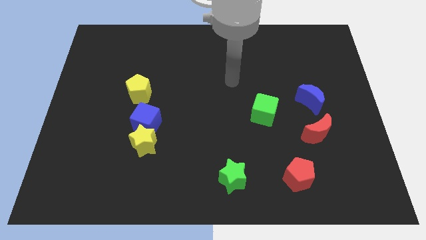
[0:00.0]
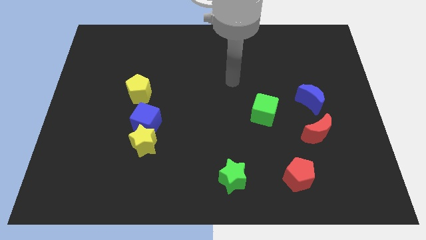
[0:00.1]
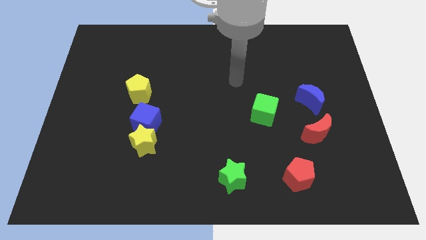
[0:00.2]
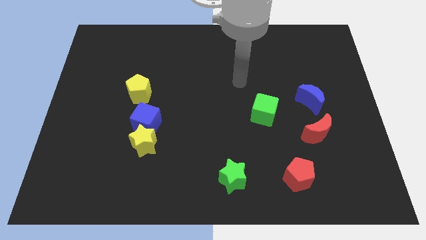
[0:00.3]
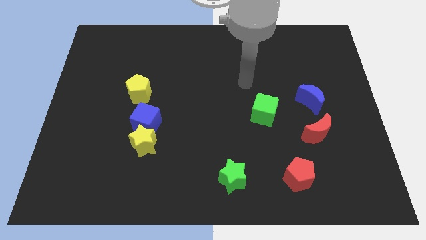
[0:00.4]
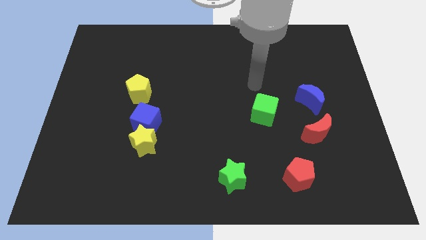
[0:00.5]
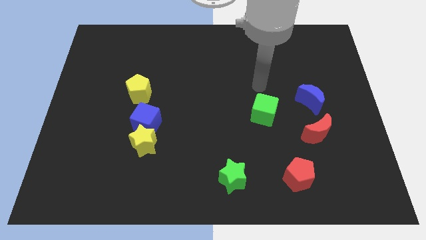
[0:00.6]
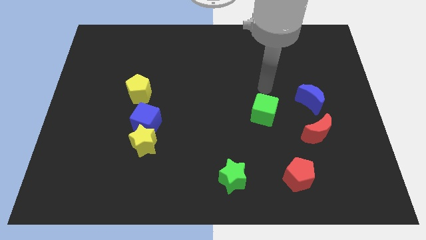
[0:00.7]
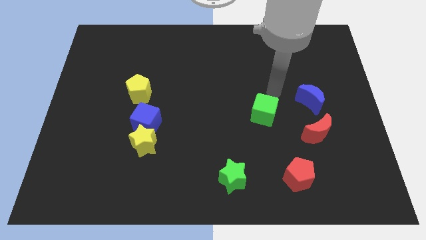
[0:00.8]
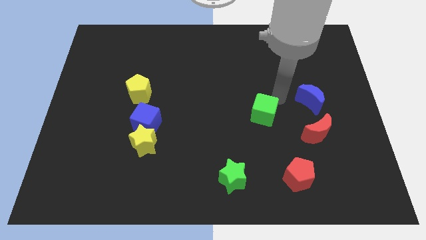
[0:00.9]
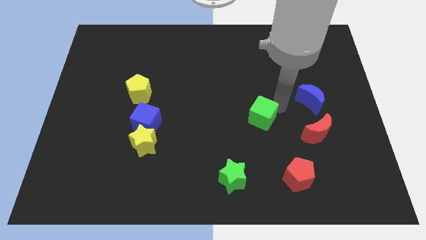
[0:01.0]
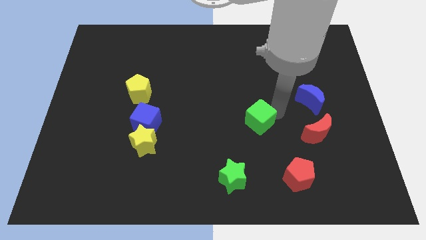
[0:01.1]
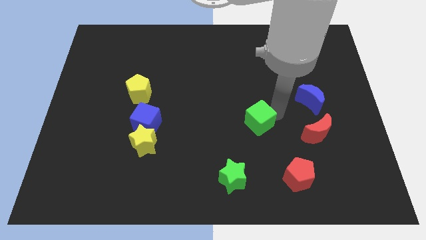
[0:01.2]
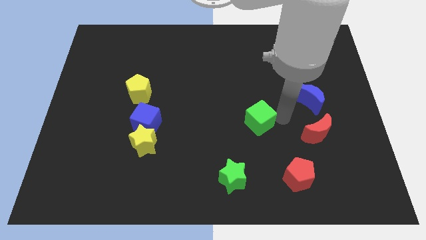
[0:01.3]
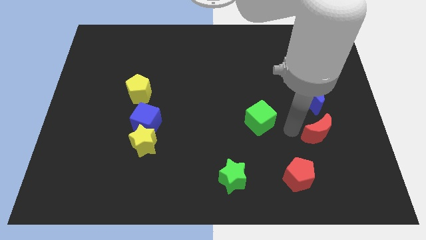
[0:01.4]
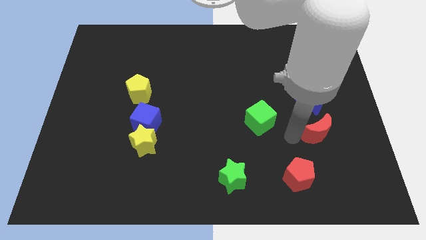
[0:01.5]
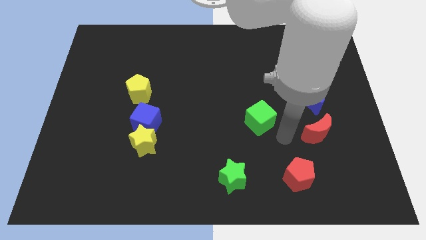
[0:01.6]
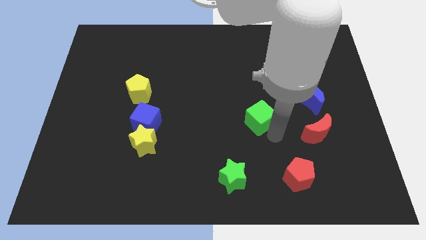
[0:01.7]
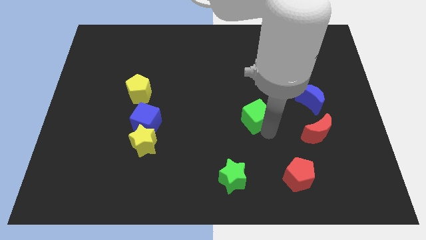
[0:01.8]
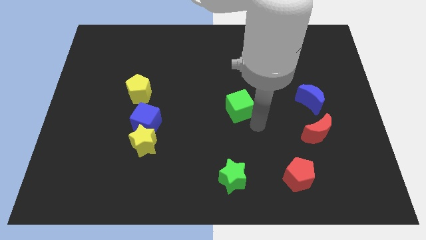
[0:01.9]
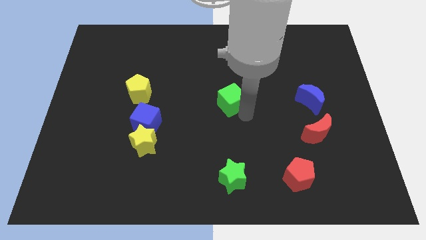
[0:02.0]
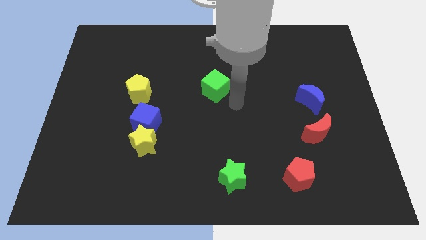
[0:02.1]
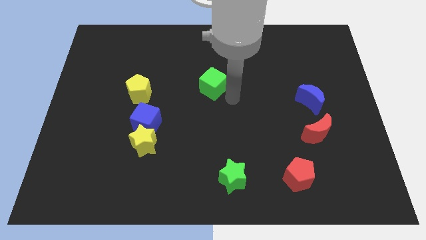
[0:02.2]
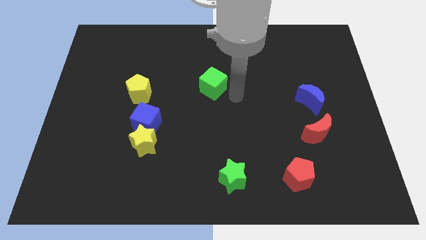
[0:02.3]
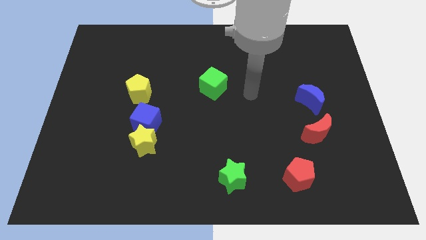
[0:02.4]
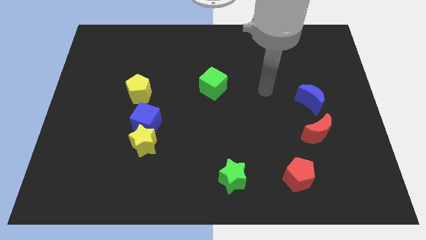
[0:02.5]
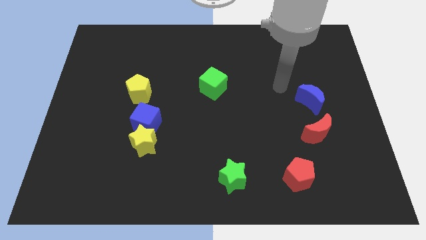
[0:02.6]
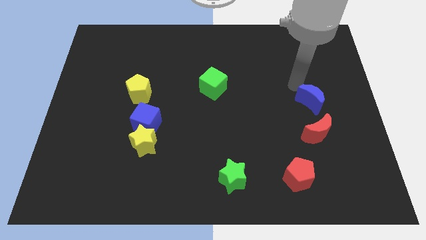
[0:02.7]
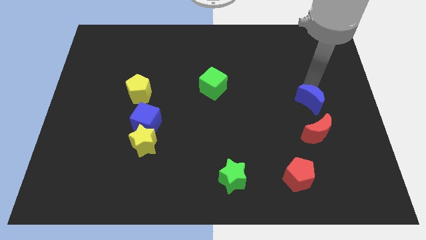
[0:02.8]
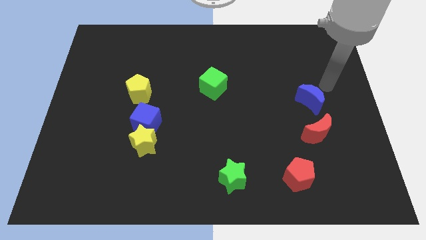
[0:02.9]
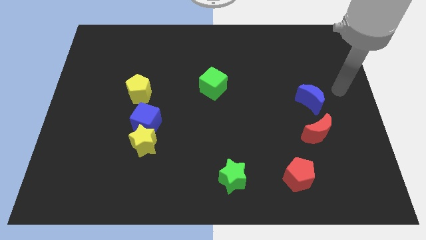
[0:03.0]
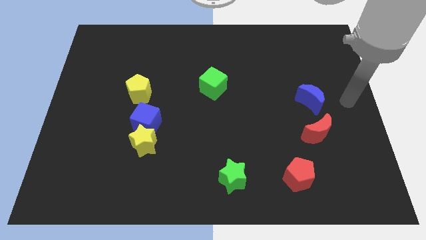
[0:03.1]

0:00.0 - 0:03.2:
move the green cube to the right of the yellow pentagon

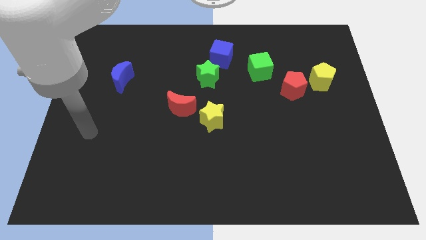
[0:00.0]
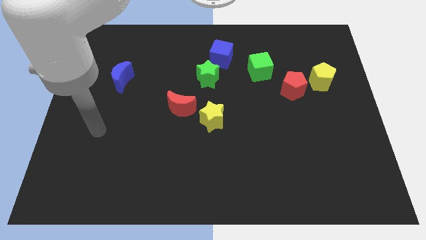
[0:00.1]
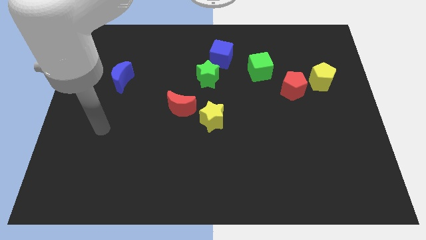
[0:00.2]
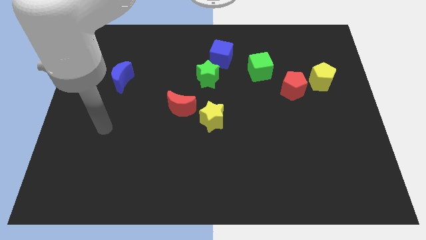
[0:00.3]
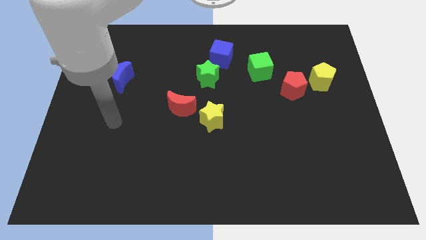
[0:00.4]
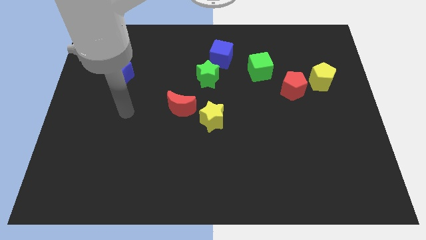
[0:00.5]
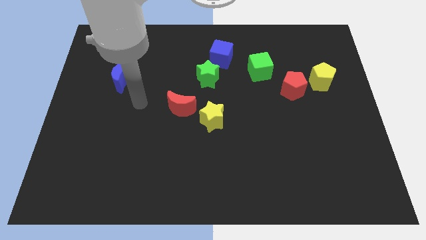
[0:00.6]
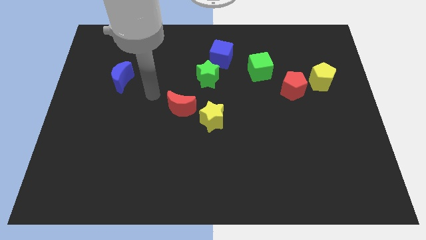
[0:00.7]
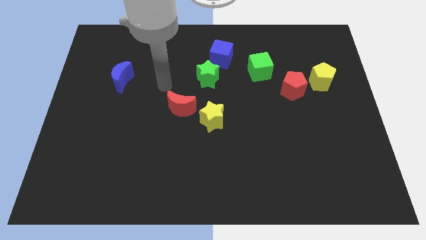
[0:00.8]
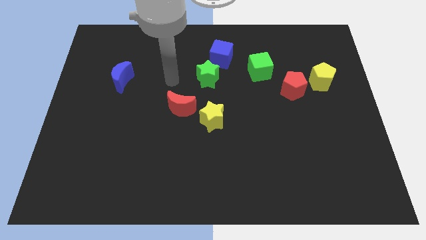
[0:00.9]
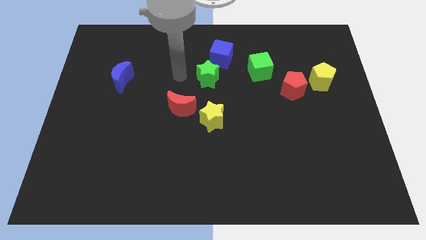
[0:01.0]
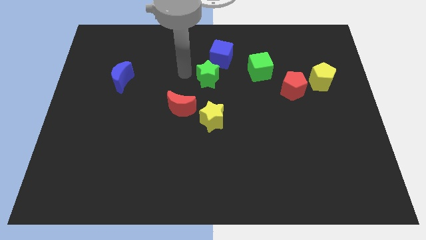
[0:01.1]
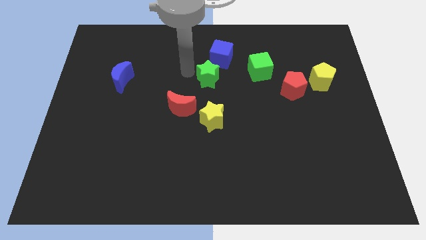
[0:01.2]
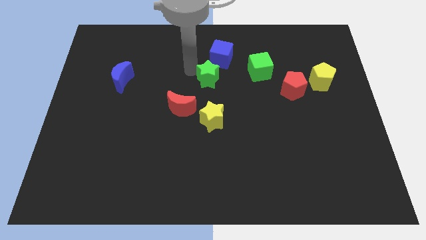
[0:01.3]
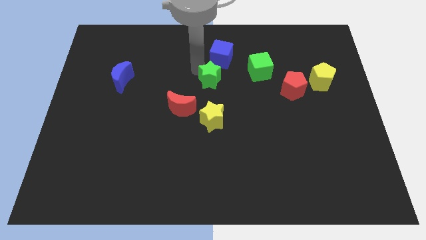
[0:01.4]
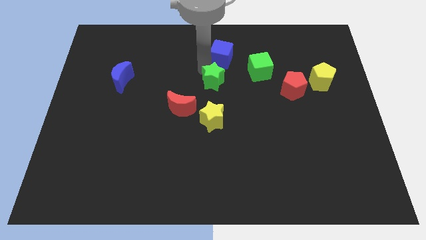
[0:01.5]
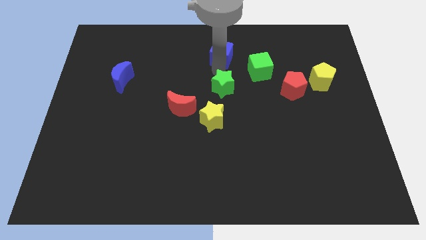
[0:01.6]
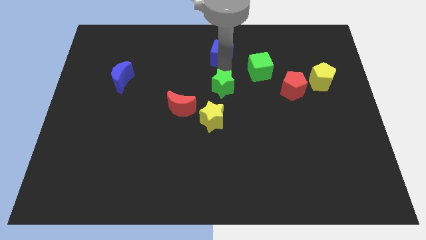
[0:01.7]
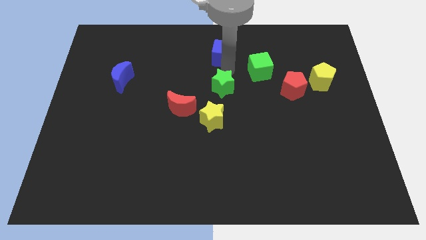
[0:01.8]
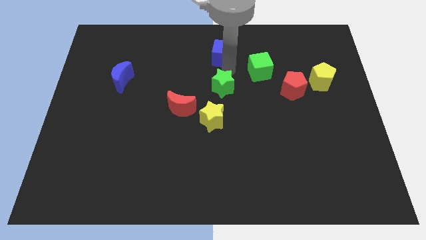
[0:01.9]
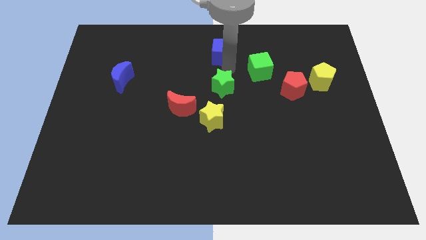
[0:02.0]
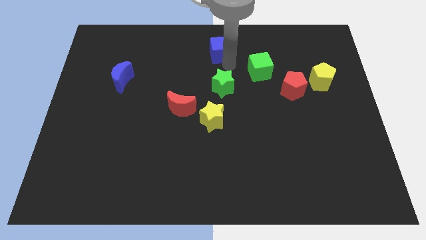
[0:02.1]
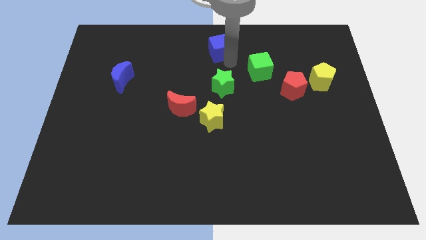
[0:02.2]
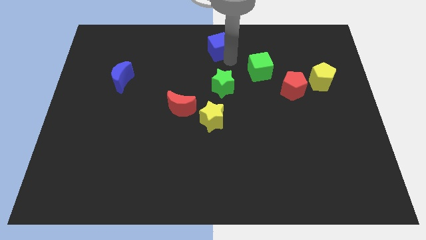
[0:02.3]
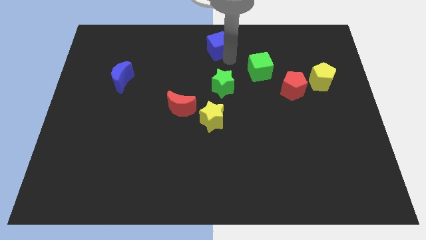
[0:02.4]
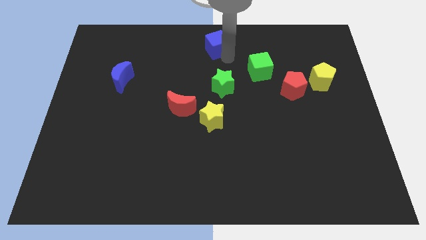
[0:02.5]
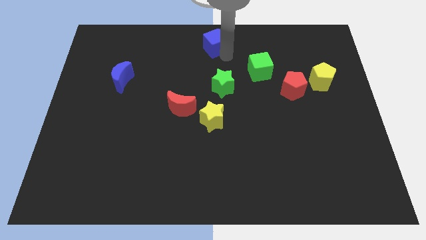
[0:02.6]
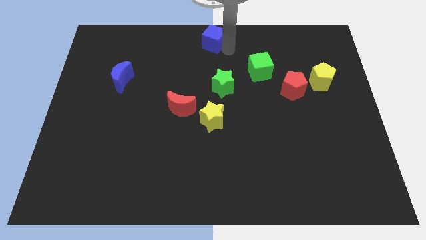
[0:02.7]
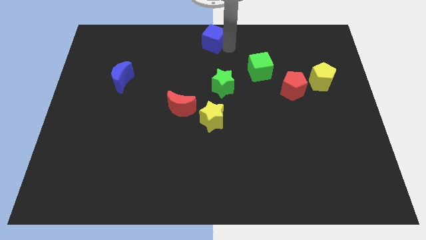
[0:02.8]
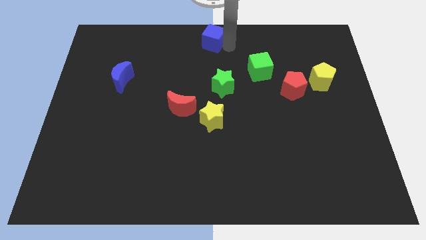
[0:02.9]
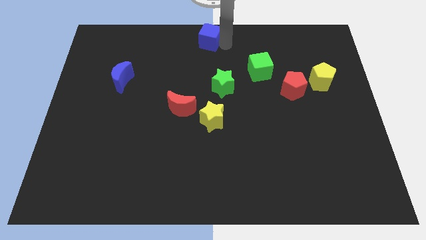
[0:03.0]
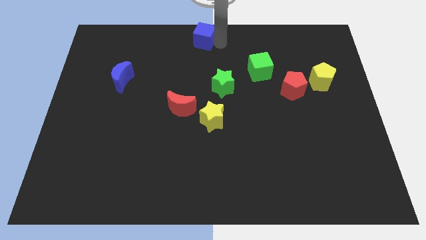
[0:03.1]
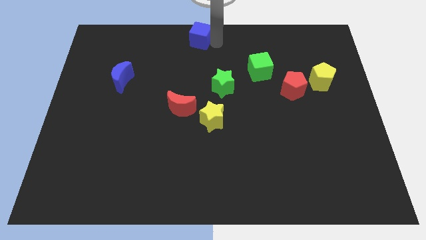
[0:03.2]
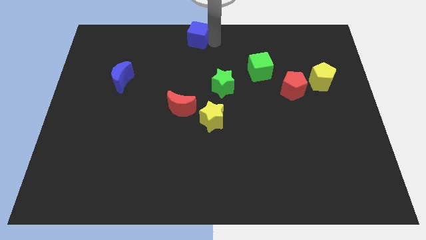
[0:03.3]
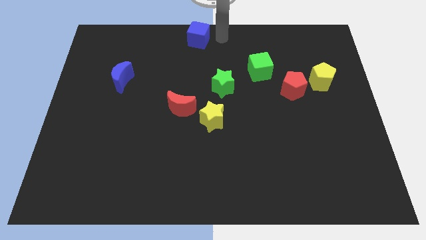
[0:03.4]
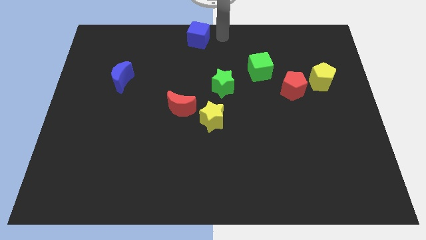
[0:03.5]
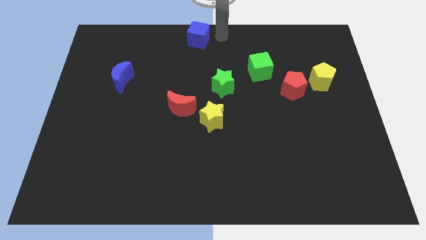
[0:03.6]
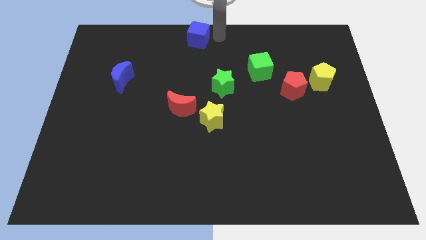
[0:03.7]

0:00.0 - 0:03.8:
move the blue cube to the top center of the board

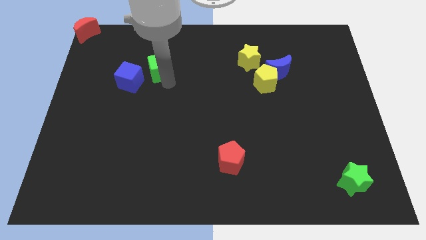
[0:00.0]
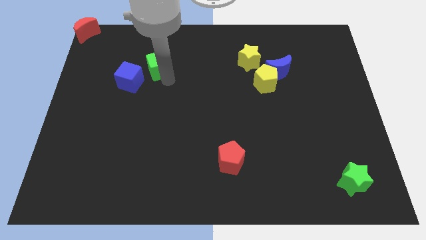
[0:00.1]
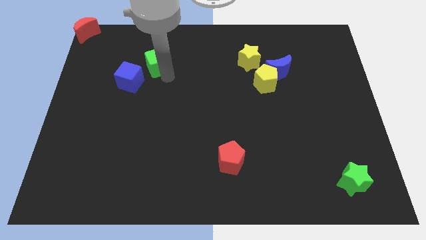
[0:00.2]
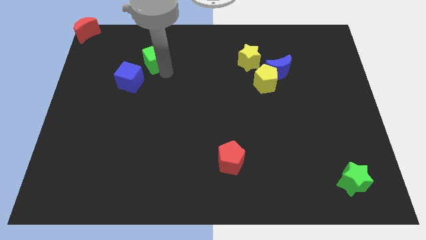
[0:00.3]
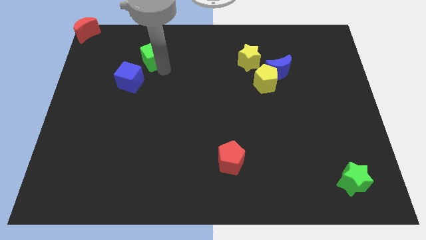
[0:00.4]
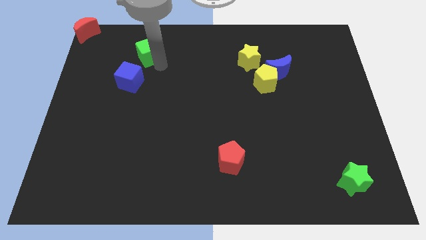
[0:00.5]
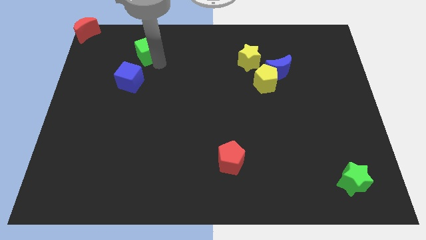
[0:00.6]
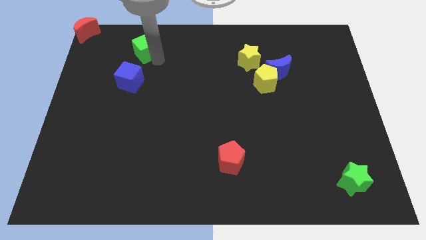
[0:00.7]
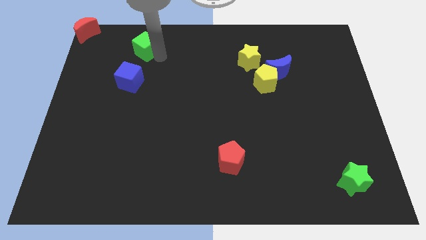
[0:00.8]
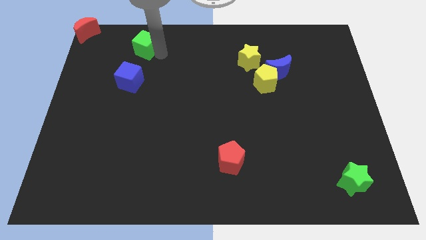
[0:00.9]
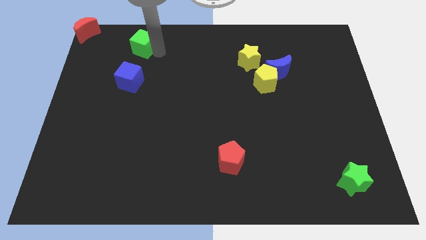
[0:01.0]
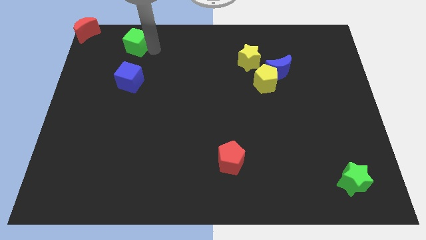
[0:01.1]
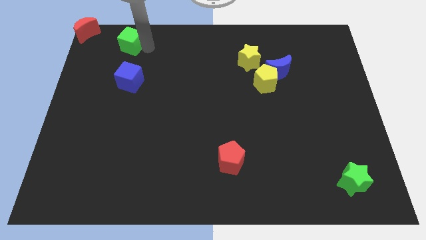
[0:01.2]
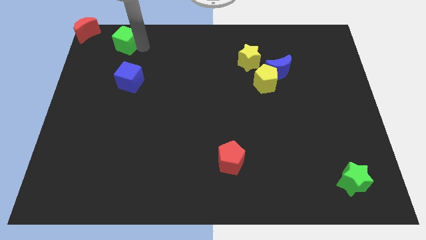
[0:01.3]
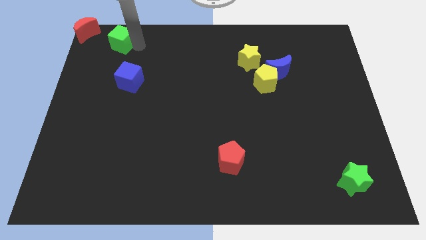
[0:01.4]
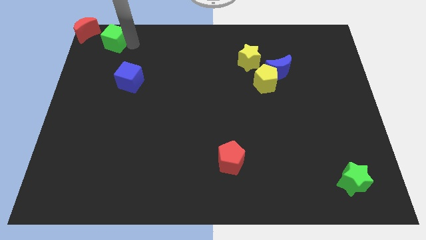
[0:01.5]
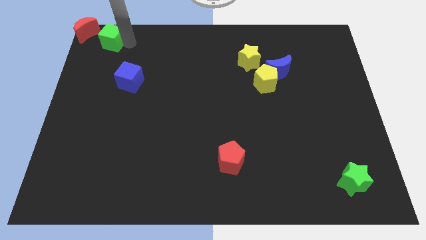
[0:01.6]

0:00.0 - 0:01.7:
place the blue cube close to the red crescent

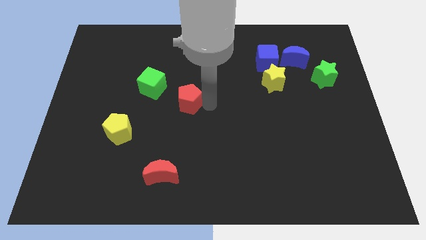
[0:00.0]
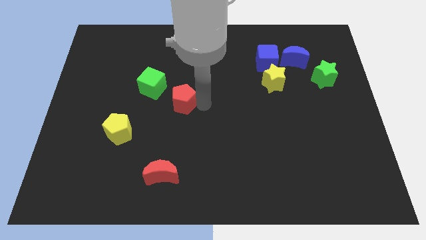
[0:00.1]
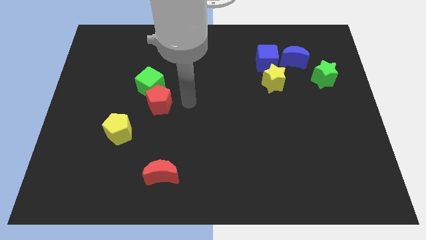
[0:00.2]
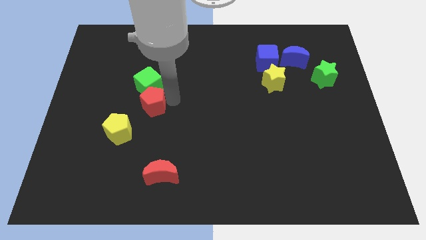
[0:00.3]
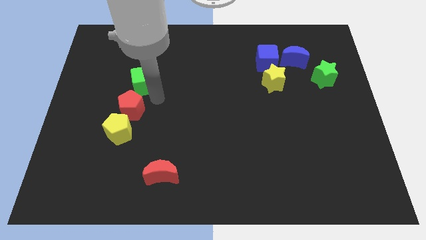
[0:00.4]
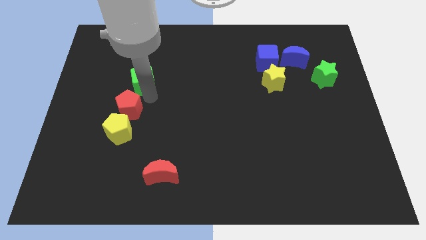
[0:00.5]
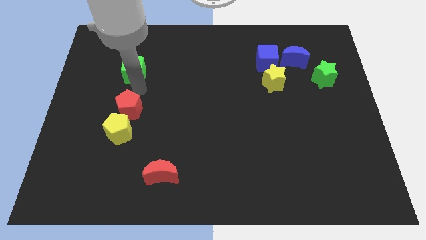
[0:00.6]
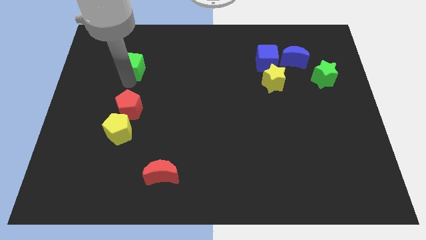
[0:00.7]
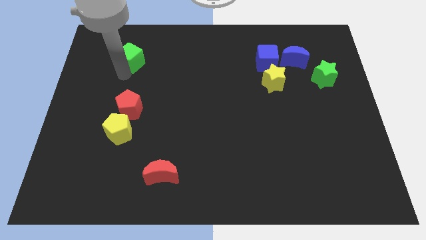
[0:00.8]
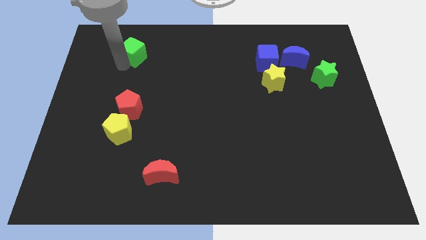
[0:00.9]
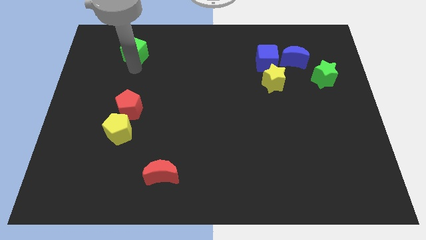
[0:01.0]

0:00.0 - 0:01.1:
place green cube and red pentagon in a vertical line
